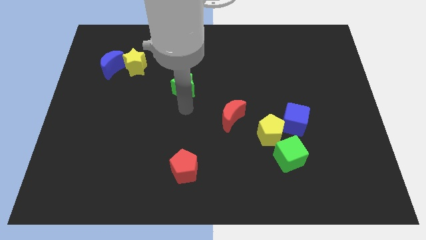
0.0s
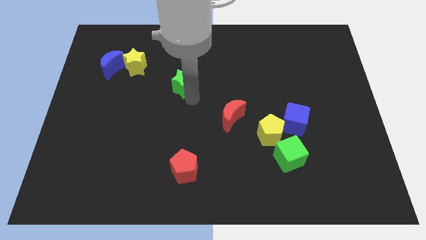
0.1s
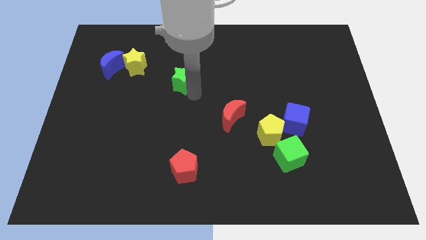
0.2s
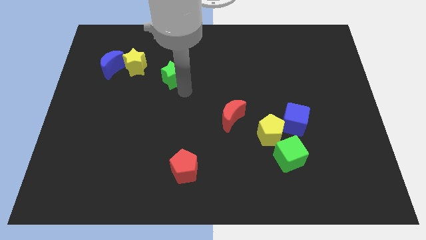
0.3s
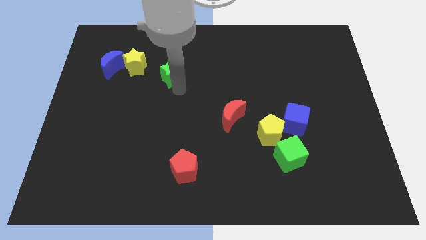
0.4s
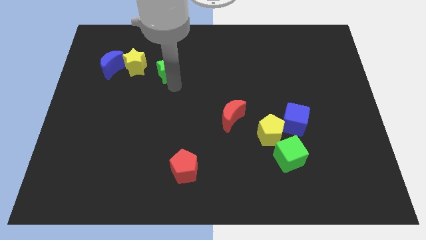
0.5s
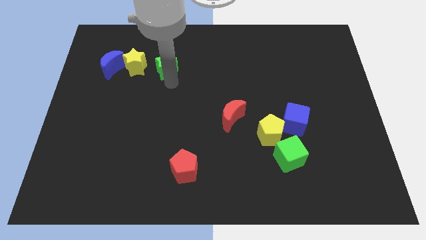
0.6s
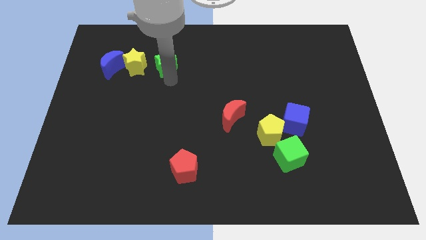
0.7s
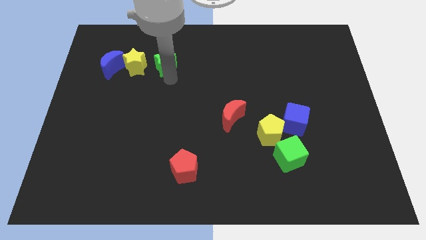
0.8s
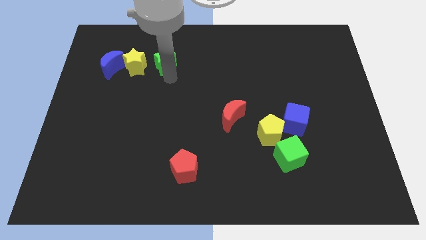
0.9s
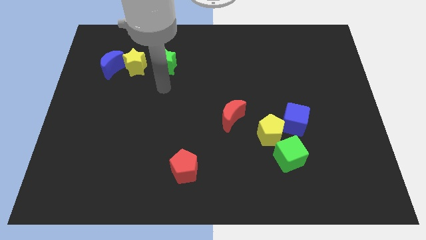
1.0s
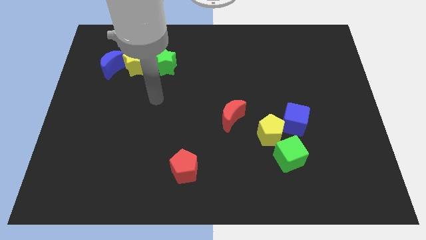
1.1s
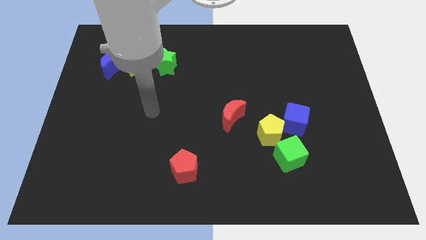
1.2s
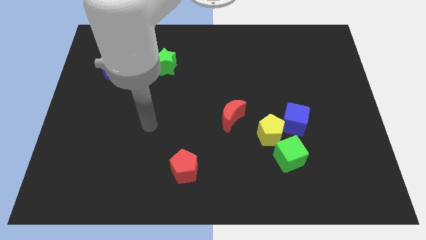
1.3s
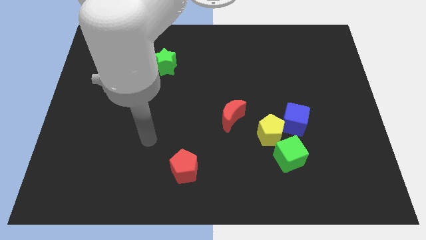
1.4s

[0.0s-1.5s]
put the green star on the right side of the yellow star

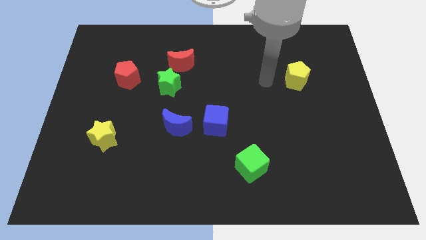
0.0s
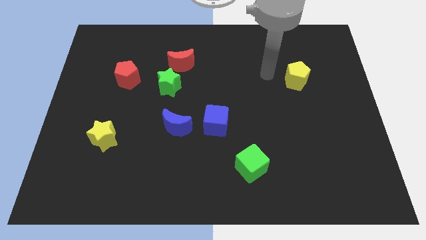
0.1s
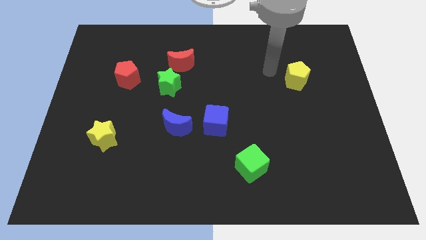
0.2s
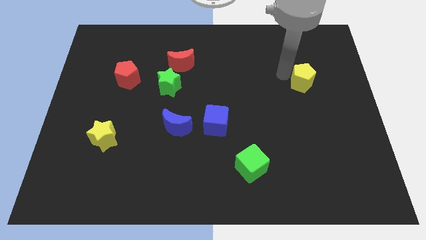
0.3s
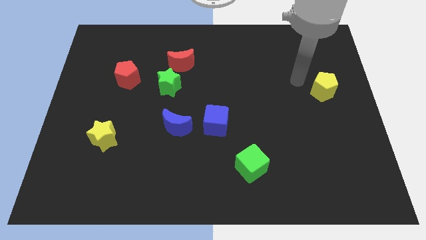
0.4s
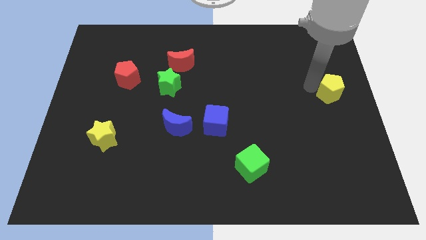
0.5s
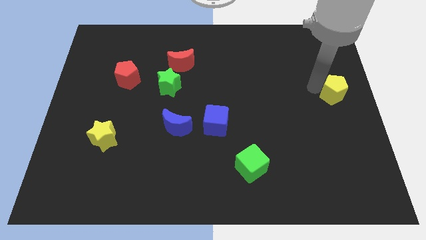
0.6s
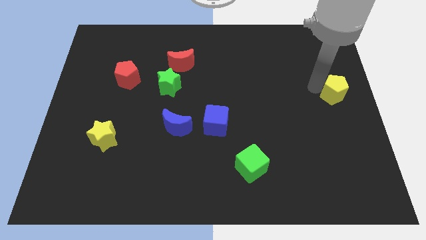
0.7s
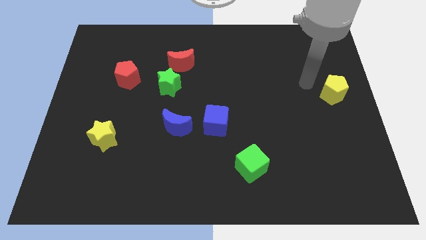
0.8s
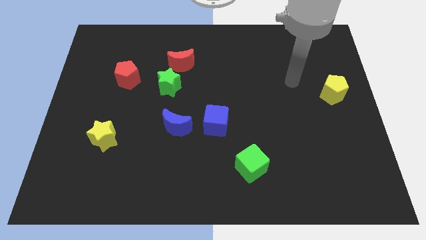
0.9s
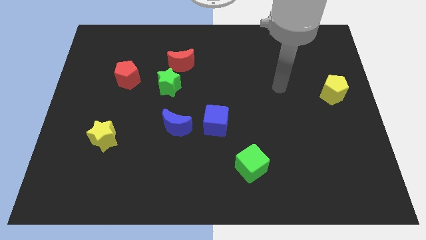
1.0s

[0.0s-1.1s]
move yellow pentagon towards center right

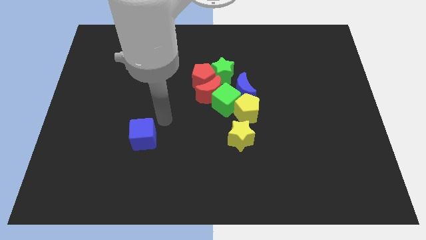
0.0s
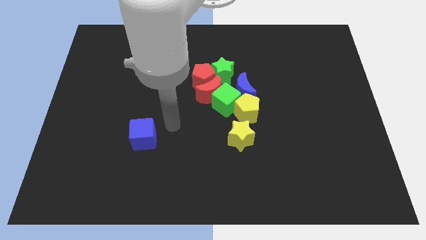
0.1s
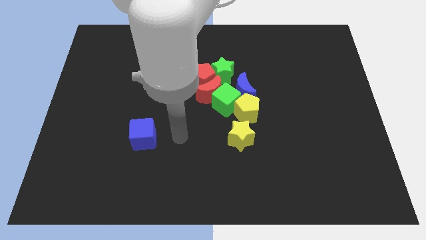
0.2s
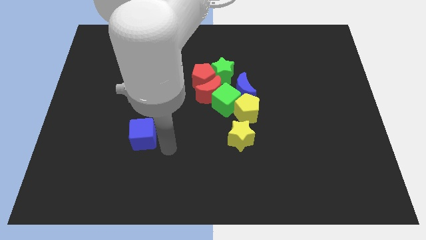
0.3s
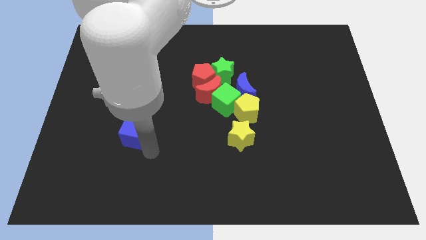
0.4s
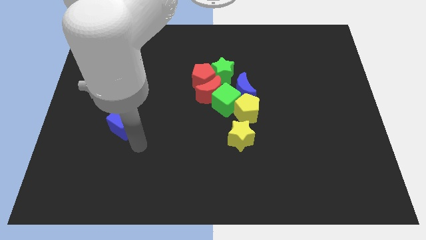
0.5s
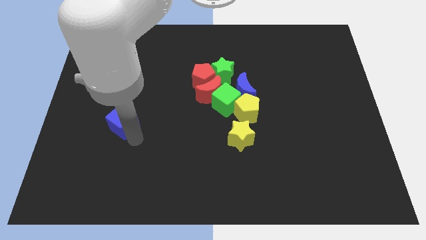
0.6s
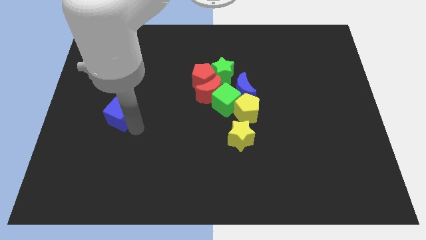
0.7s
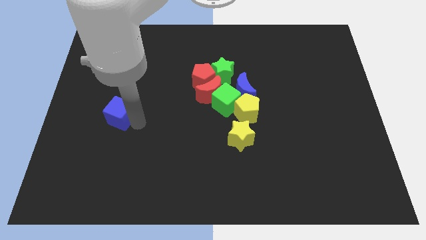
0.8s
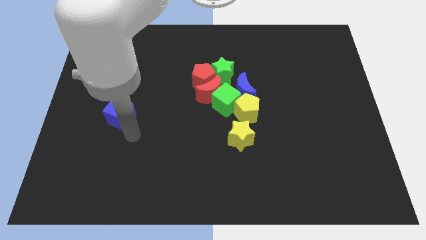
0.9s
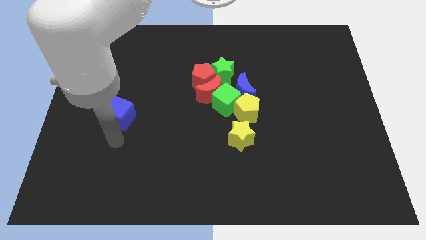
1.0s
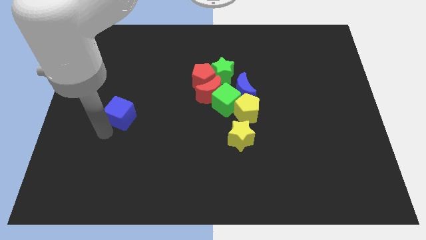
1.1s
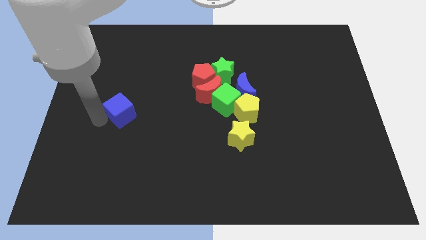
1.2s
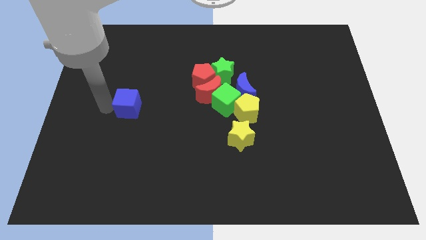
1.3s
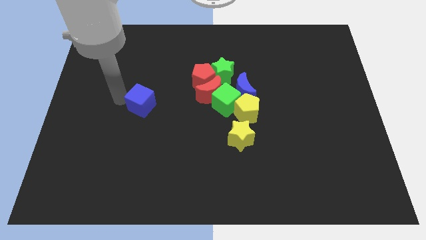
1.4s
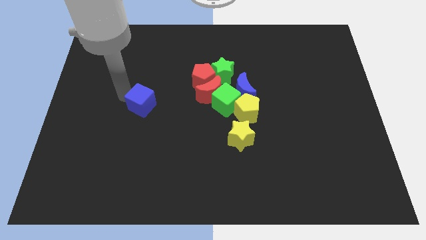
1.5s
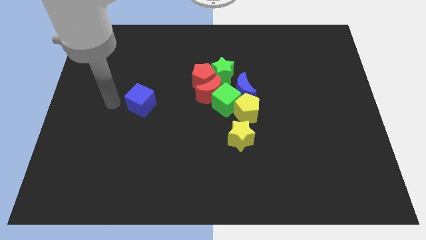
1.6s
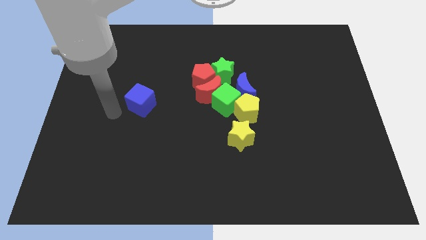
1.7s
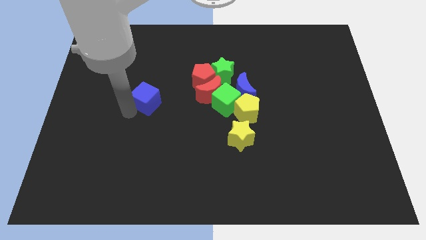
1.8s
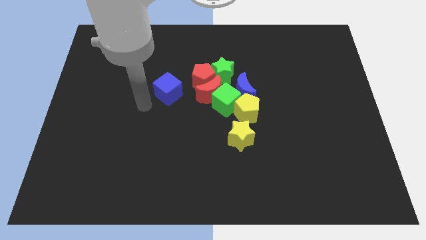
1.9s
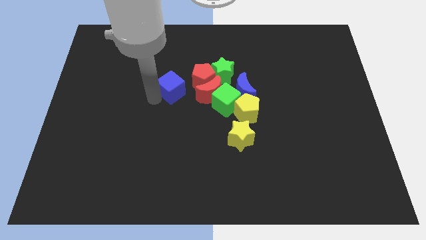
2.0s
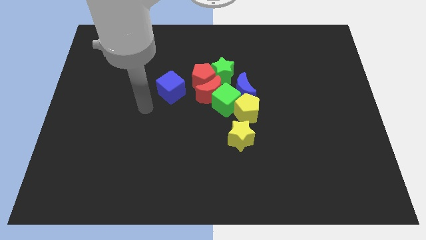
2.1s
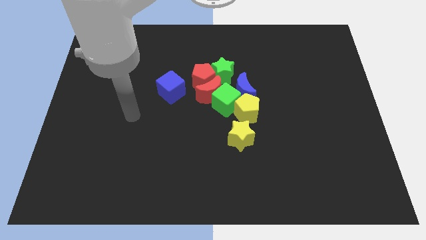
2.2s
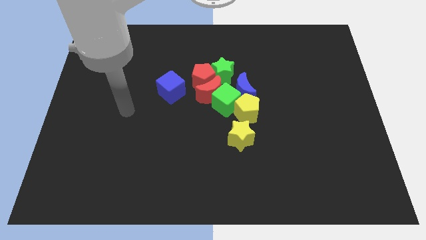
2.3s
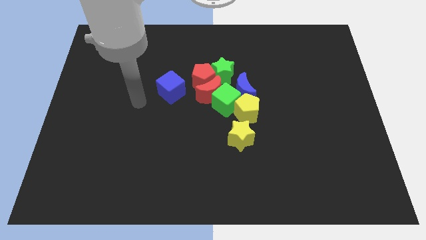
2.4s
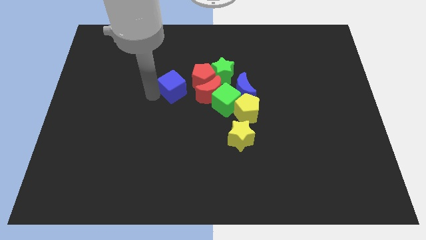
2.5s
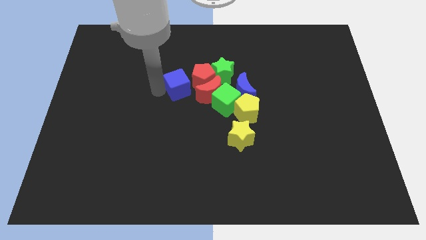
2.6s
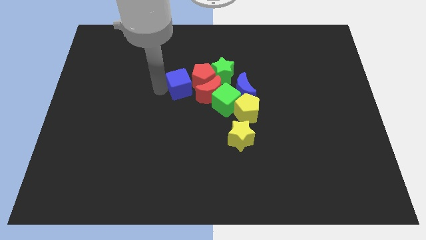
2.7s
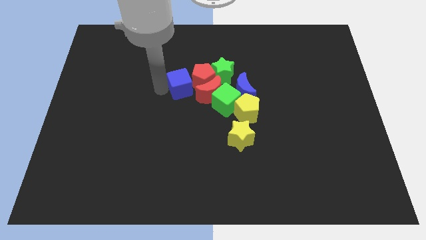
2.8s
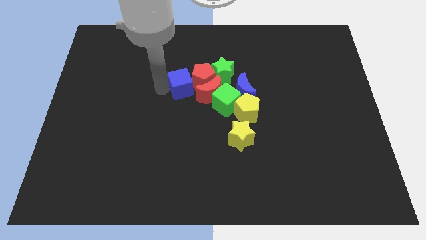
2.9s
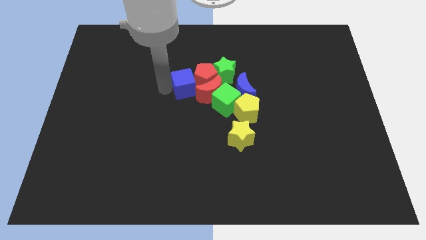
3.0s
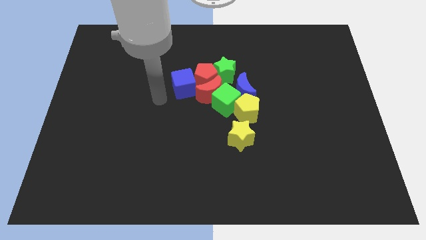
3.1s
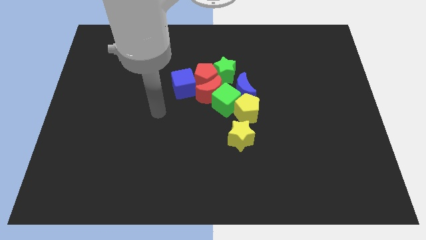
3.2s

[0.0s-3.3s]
slide the blue cube into the left side of the red blocks

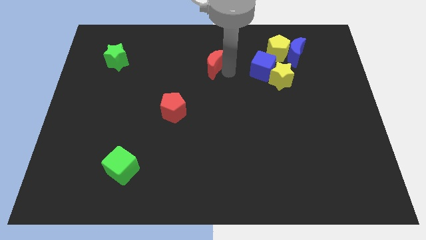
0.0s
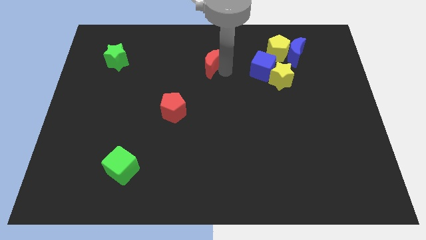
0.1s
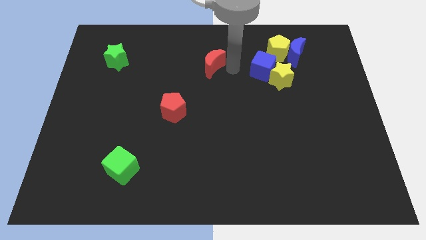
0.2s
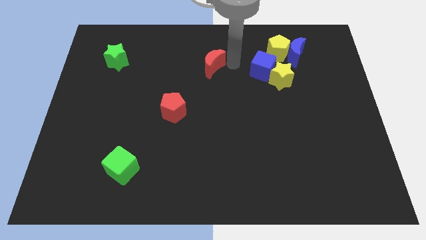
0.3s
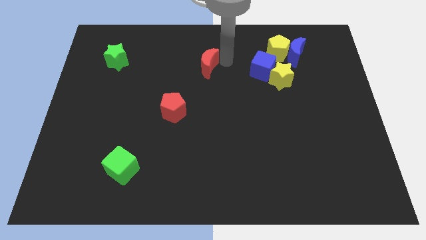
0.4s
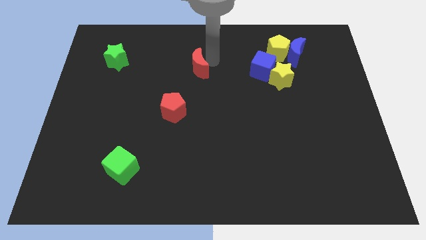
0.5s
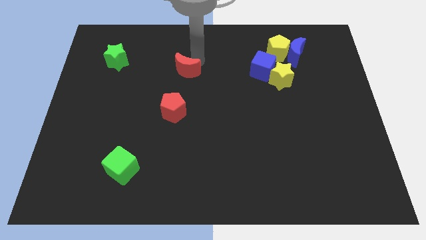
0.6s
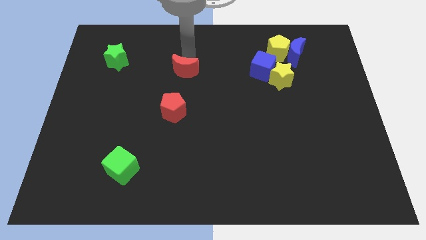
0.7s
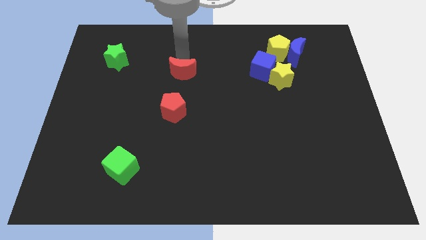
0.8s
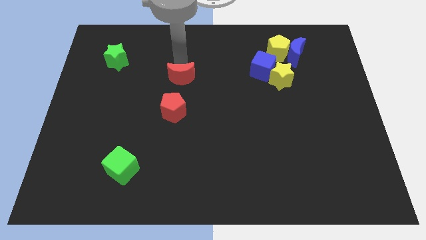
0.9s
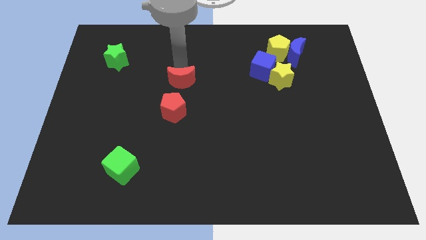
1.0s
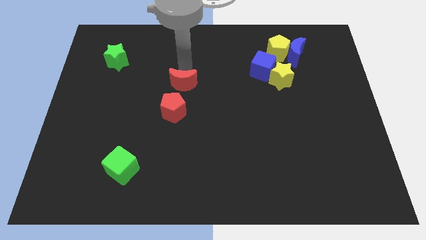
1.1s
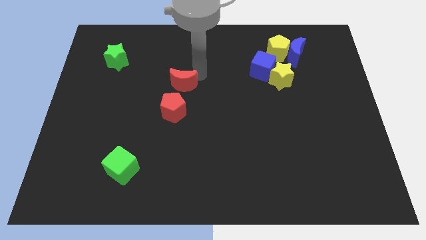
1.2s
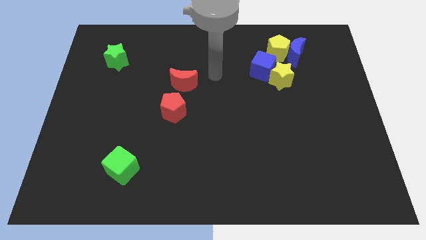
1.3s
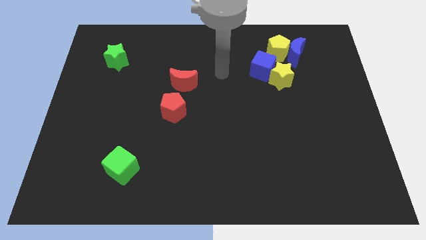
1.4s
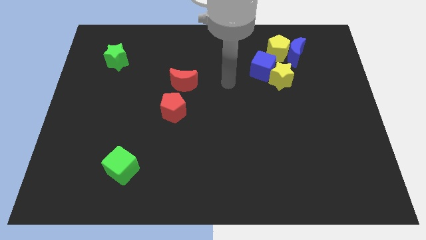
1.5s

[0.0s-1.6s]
put the red crescent above the the red pentagon

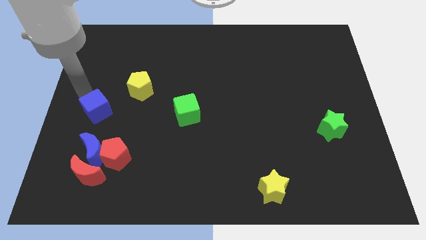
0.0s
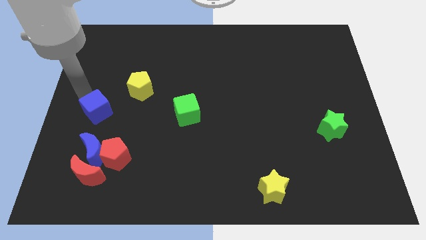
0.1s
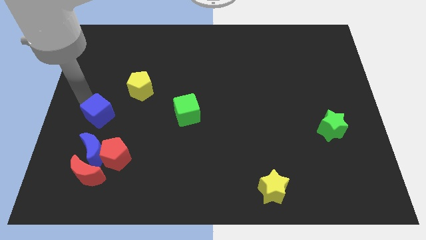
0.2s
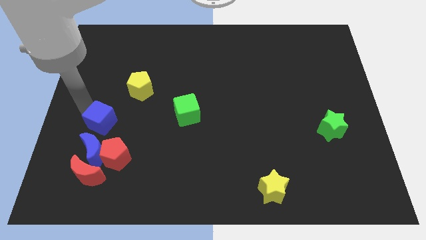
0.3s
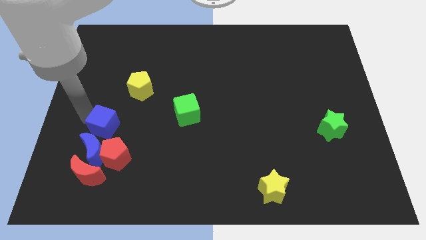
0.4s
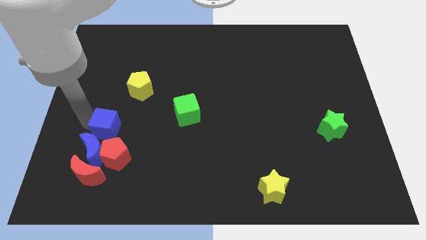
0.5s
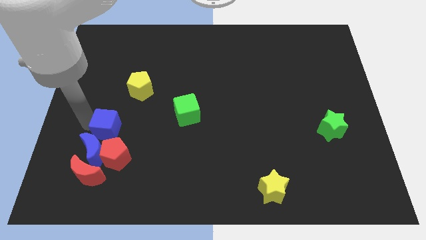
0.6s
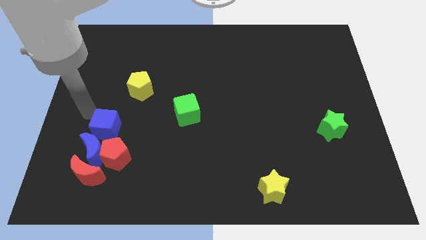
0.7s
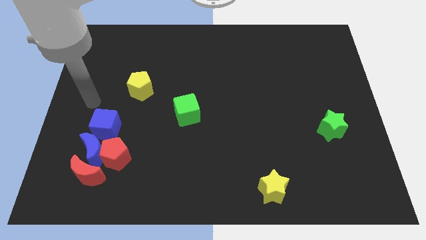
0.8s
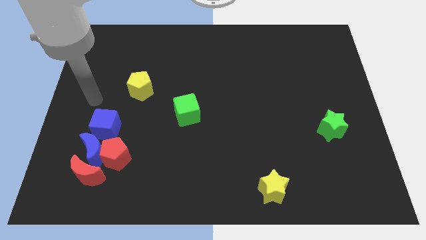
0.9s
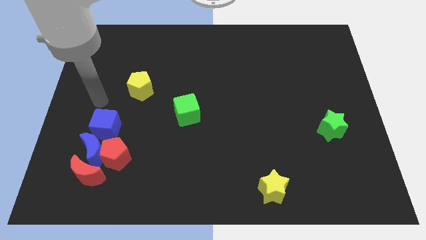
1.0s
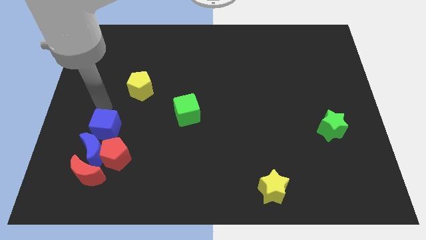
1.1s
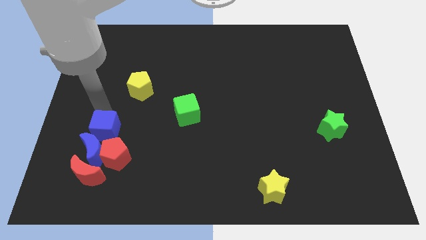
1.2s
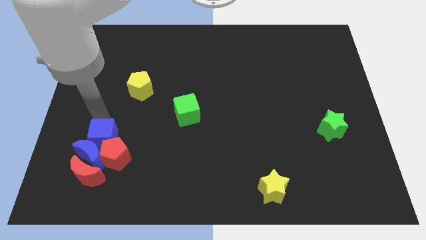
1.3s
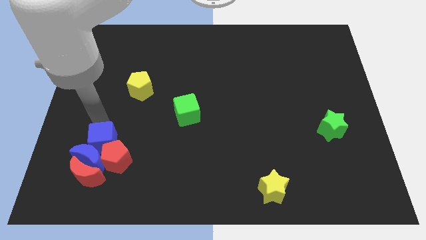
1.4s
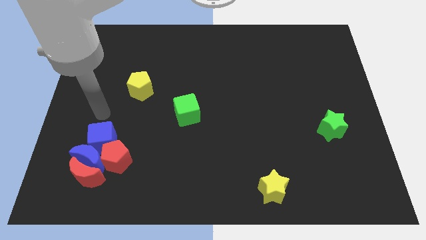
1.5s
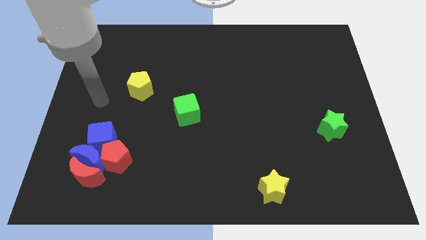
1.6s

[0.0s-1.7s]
move the blue cube to the top of the blue crescent
